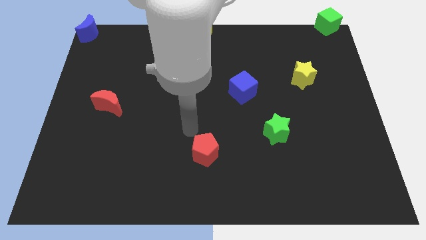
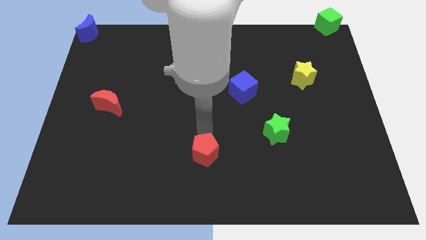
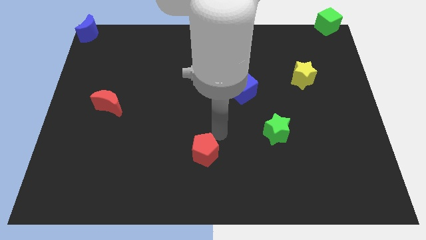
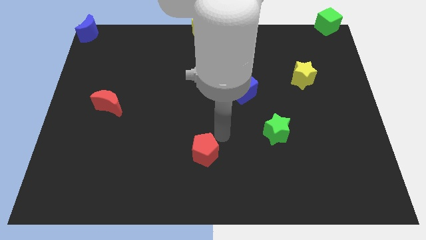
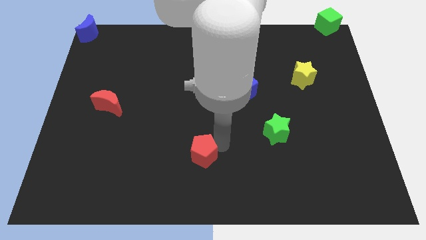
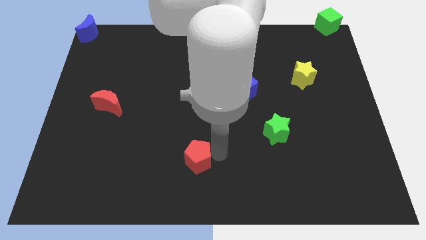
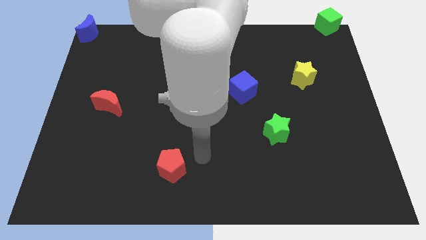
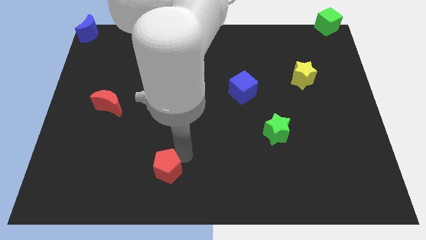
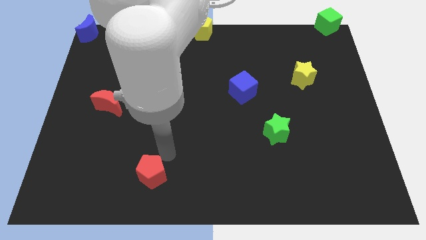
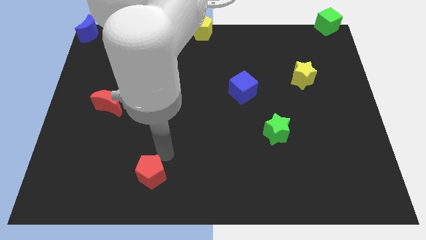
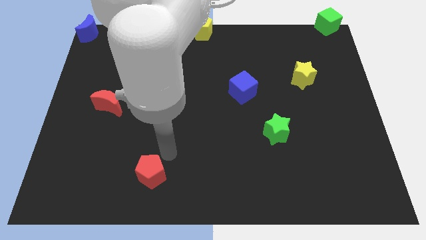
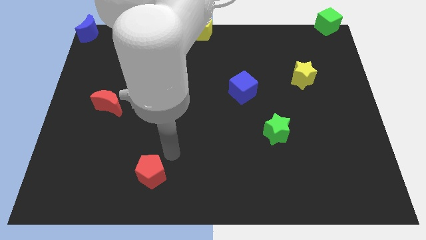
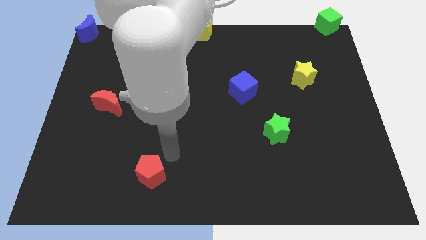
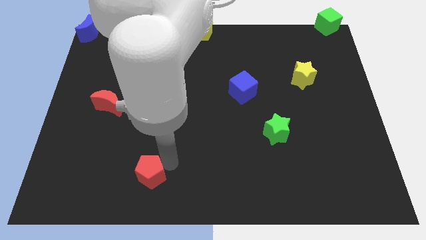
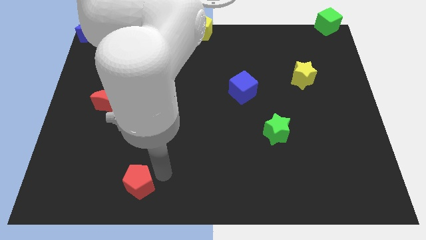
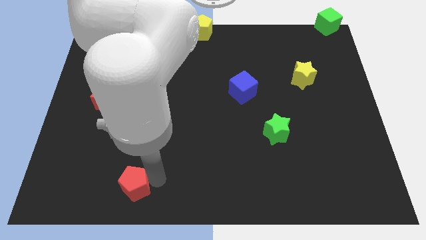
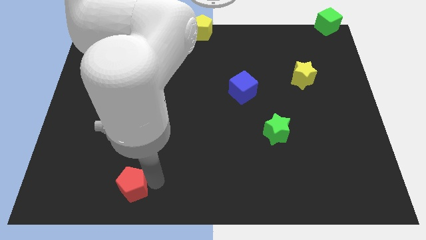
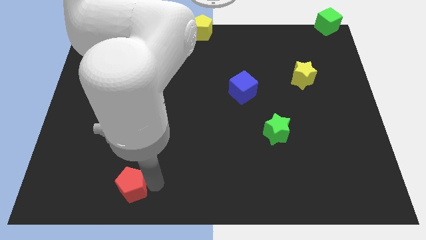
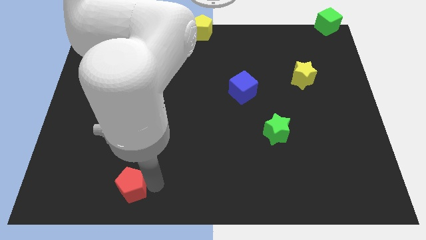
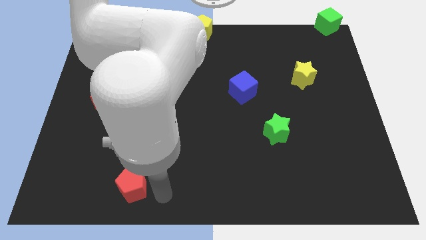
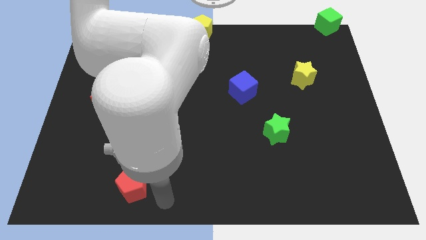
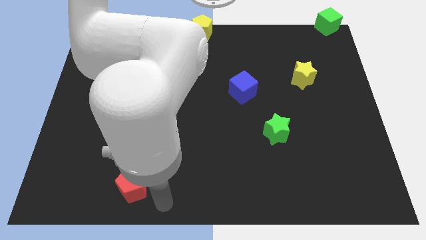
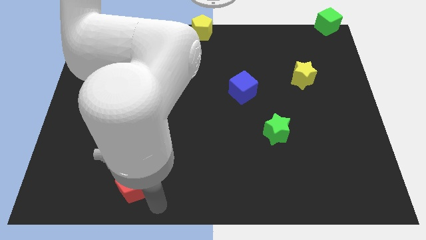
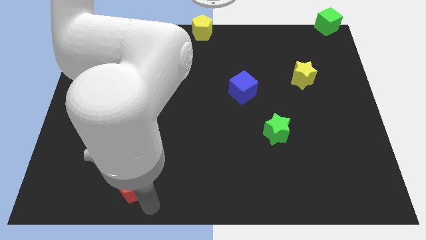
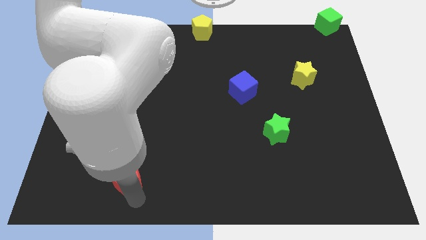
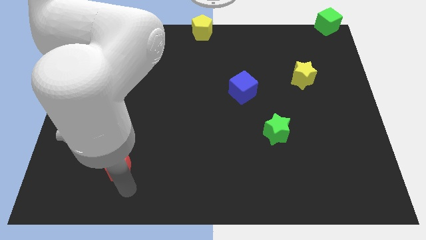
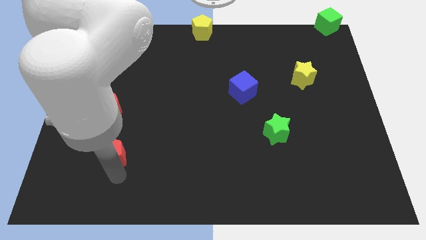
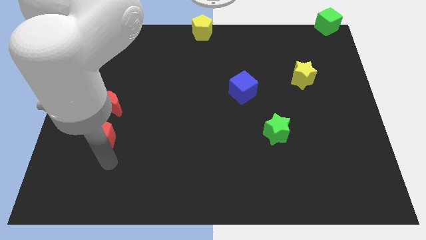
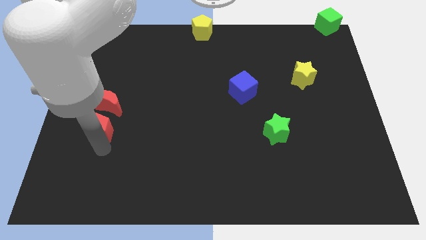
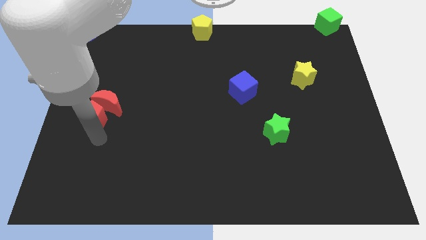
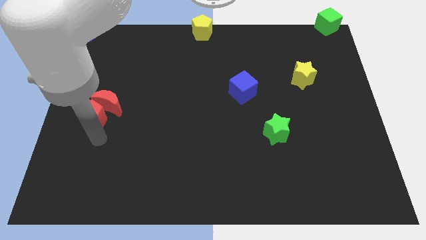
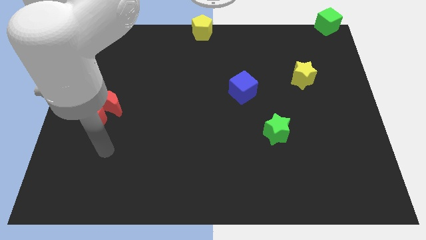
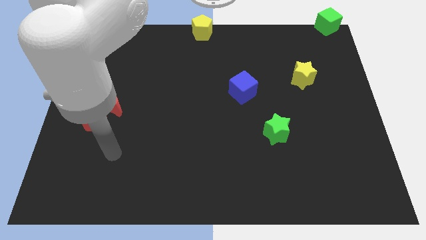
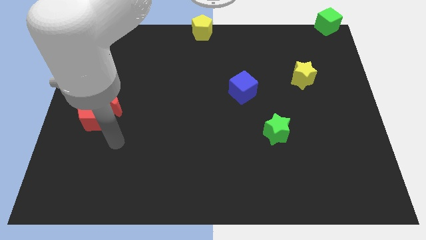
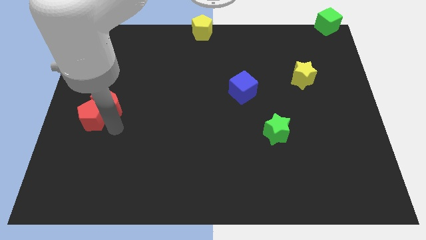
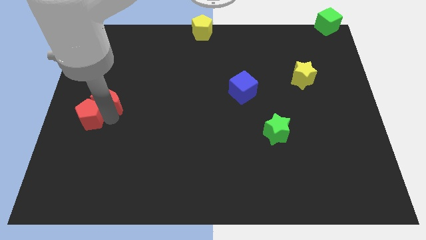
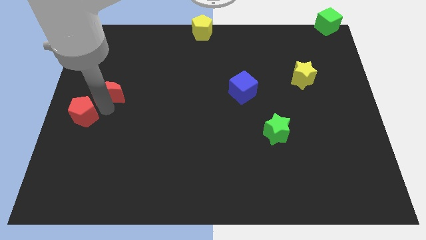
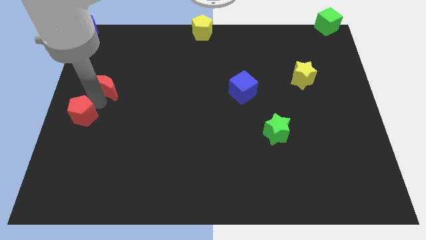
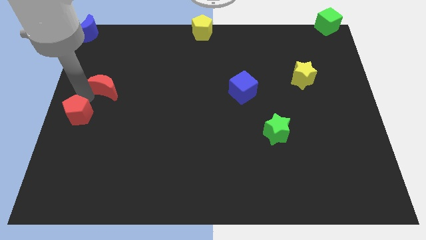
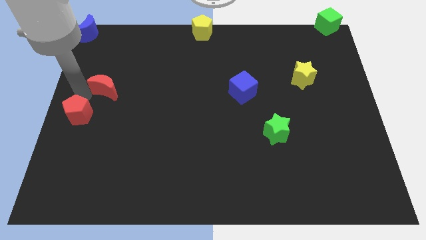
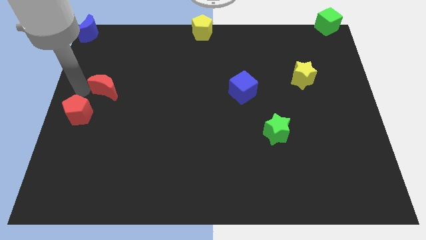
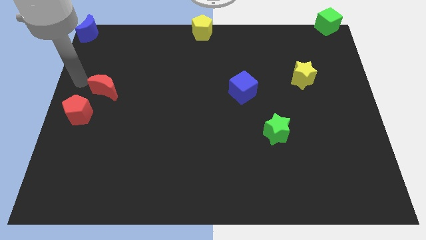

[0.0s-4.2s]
place red pentagon at the center left

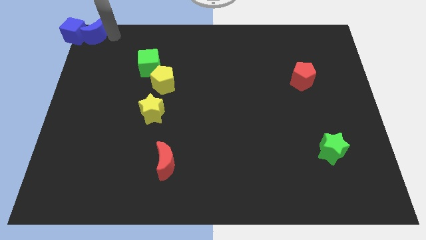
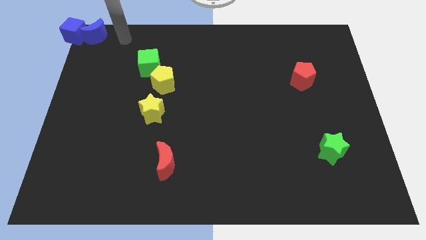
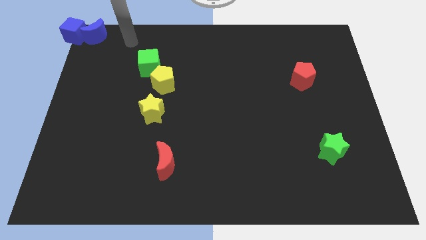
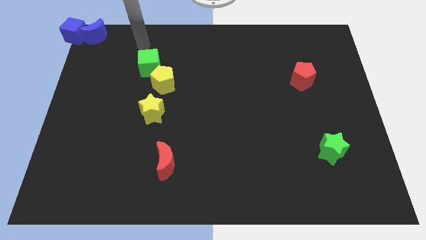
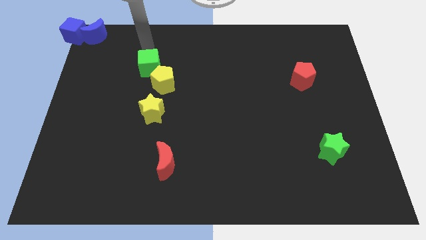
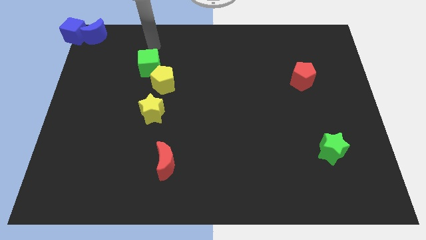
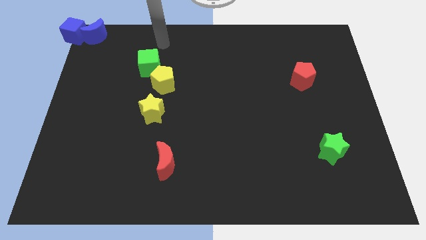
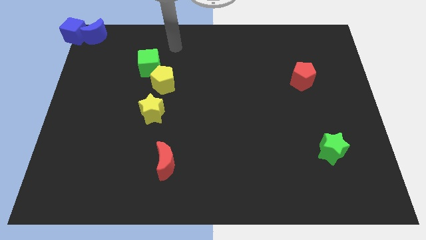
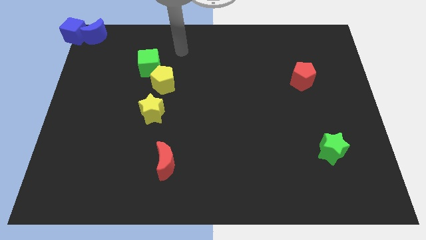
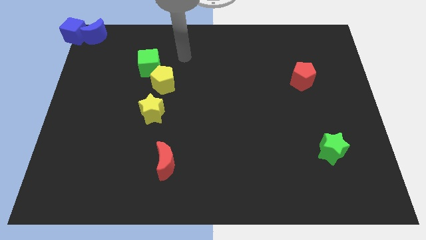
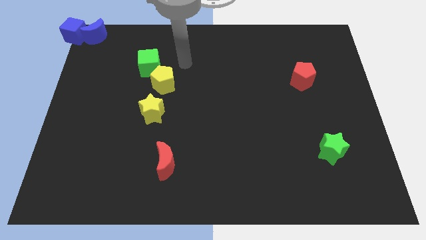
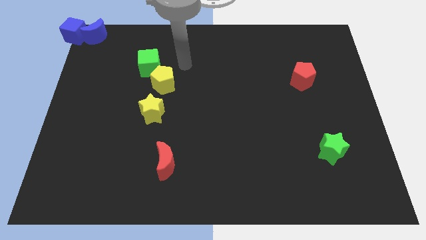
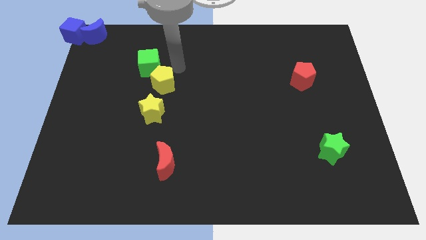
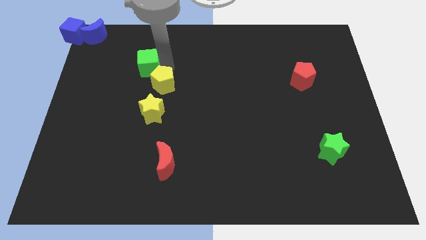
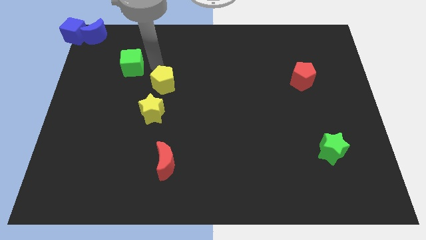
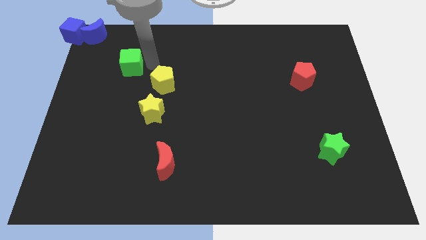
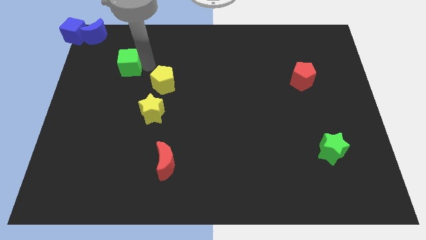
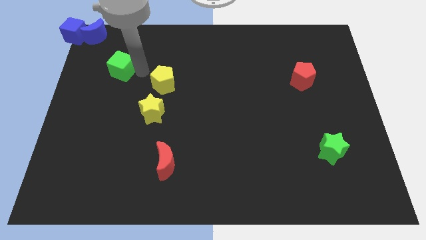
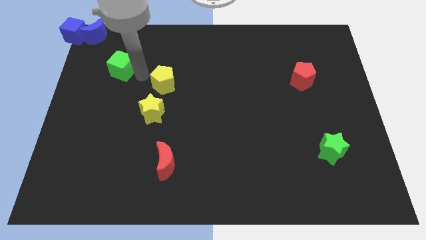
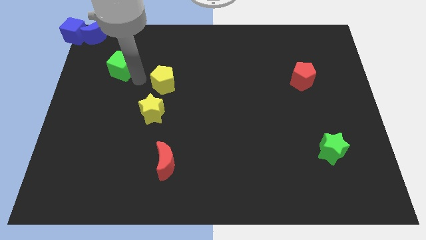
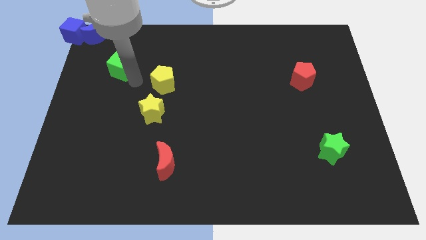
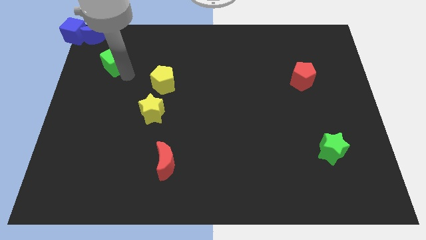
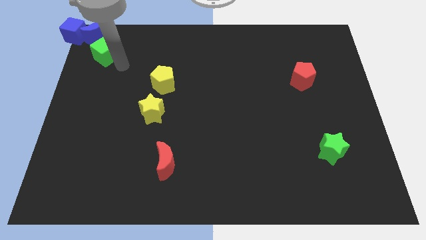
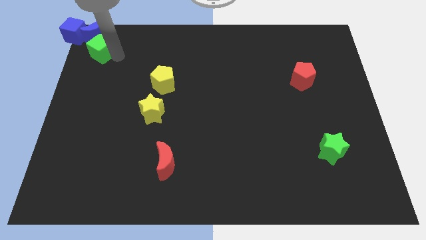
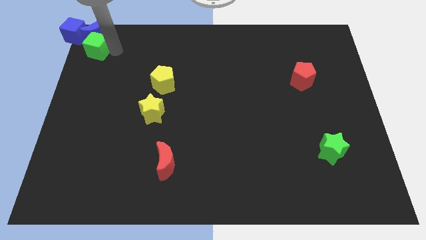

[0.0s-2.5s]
push the green cube to the bottom of the blue crescent

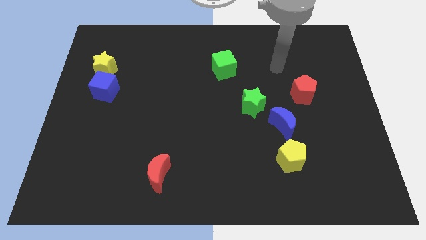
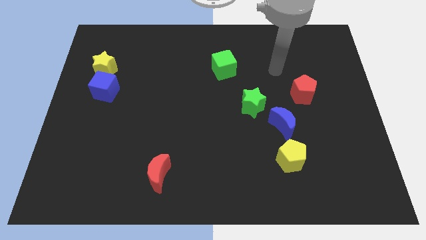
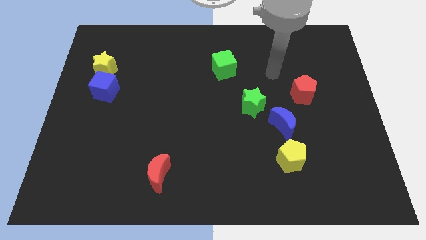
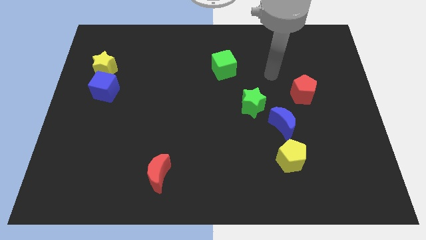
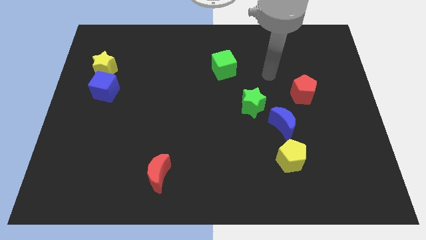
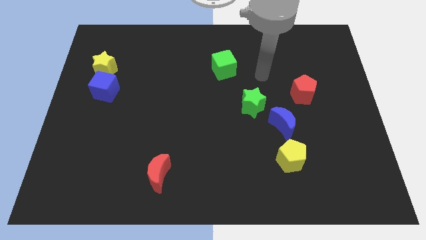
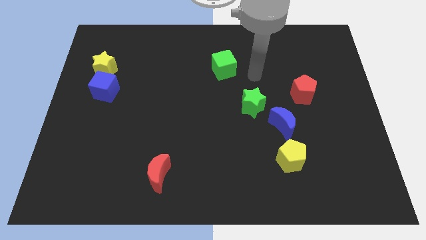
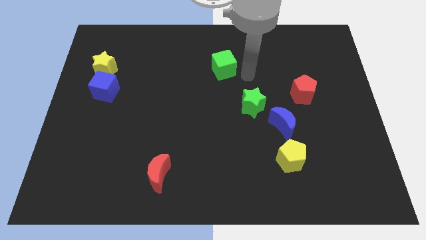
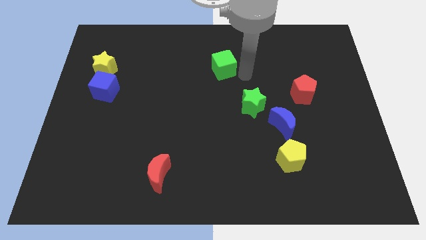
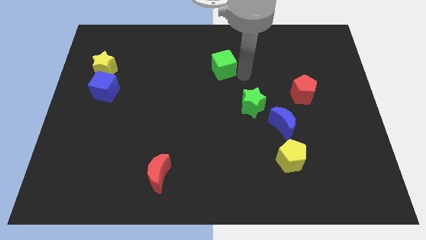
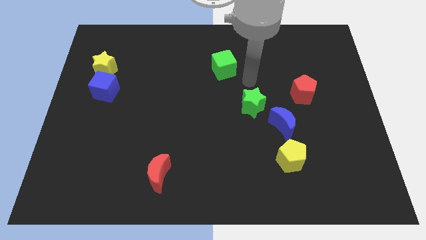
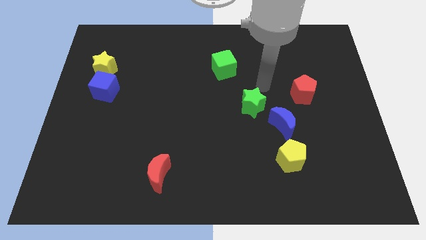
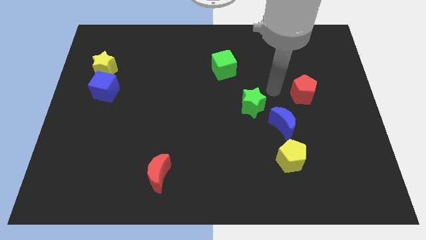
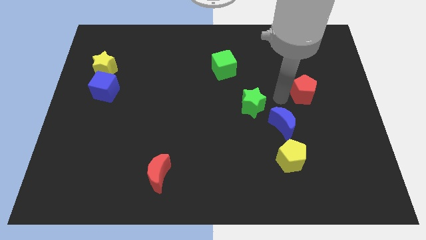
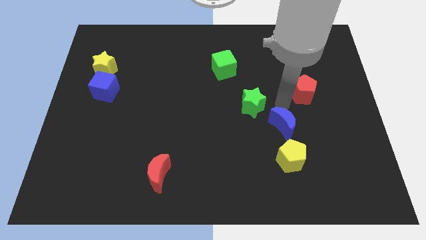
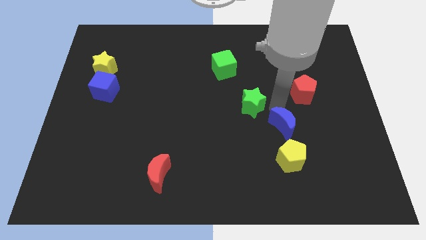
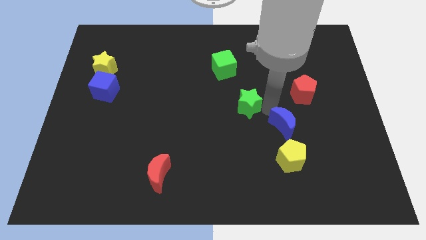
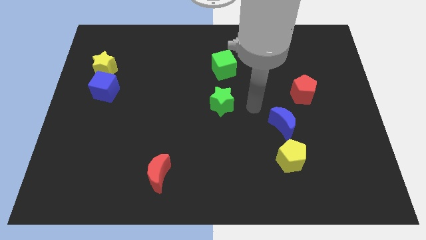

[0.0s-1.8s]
put the green star vertically below the green cube

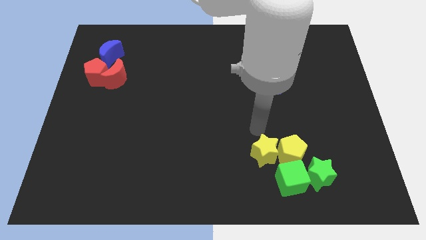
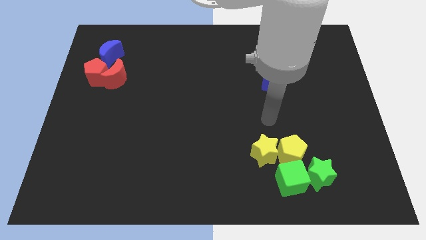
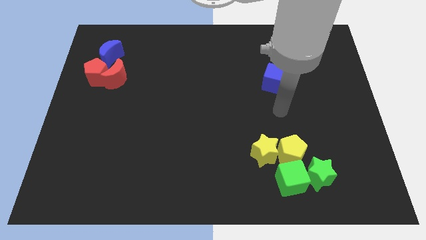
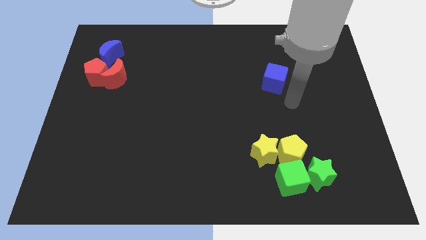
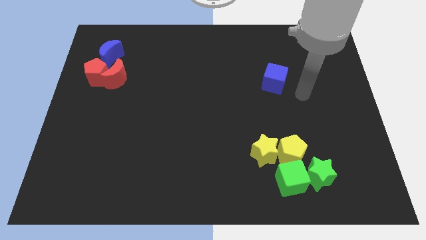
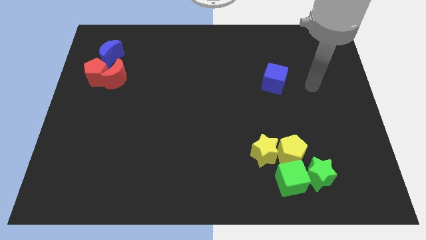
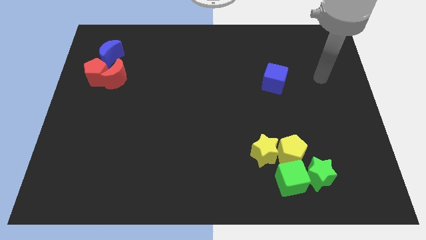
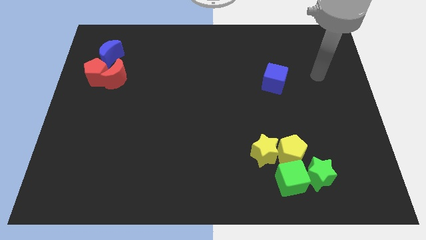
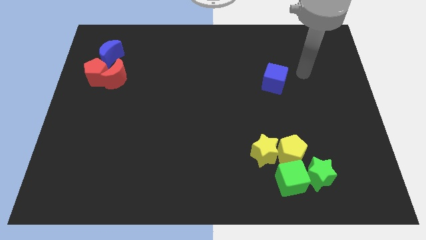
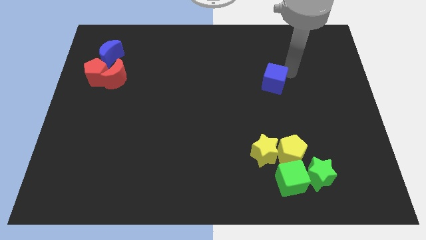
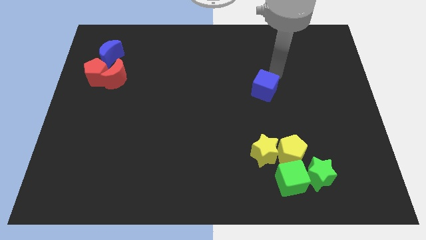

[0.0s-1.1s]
tap your arm on top right of blue cube
